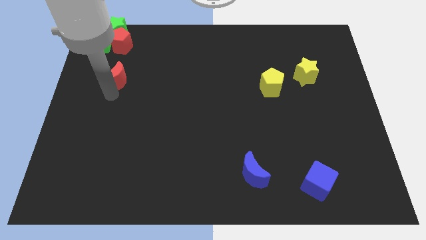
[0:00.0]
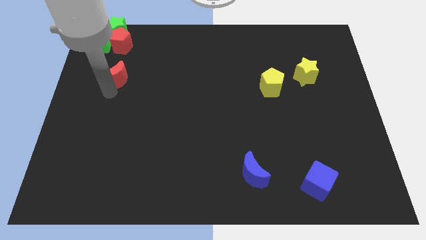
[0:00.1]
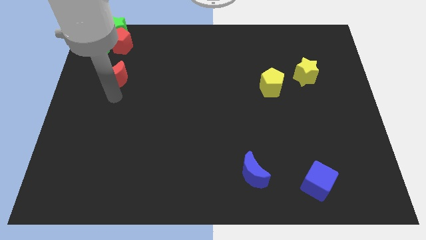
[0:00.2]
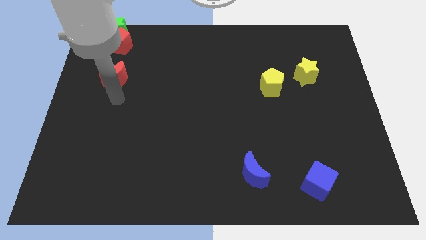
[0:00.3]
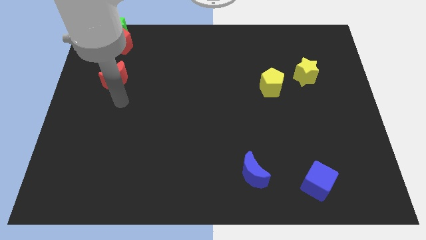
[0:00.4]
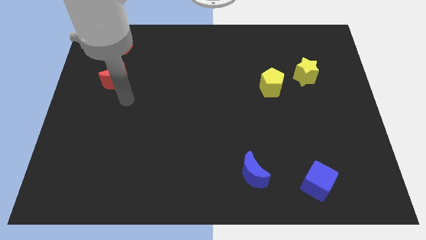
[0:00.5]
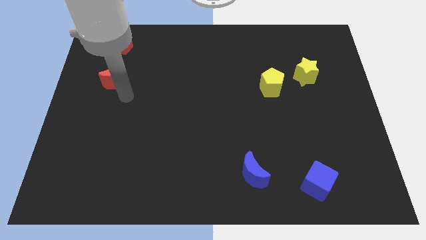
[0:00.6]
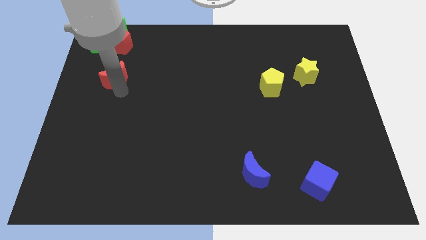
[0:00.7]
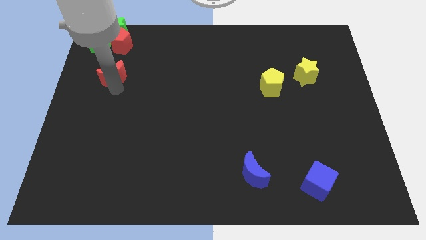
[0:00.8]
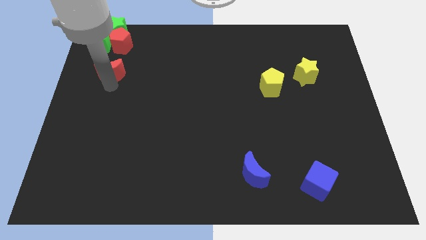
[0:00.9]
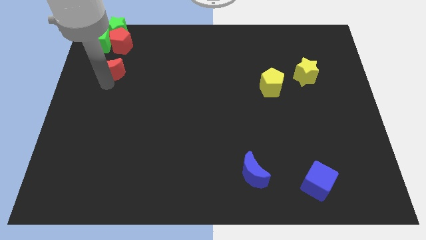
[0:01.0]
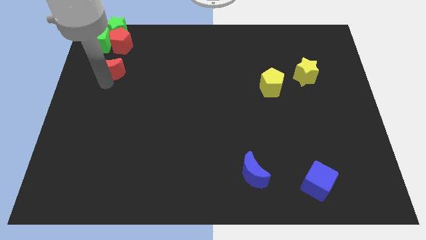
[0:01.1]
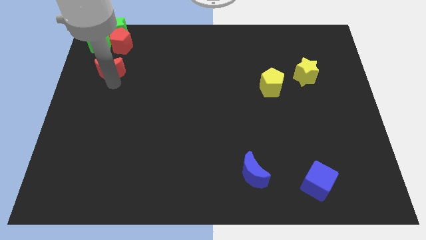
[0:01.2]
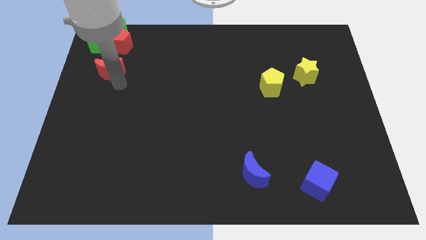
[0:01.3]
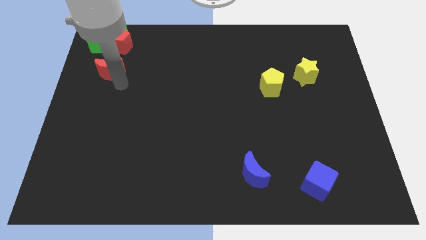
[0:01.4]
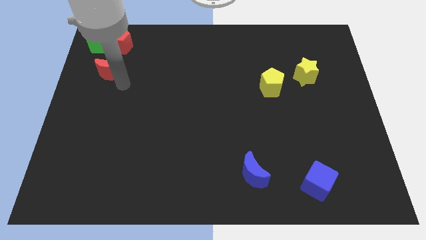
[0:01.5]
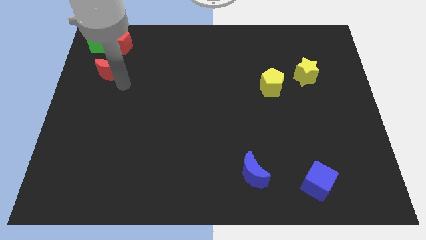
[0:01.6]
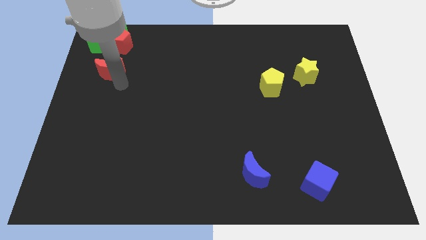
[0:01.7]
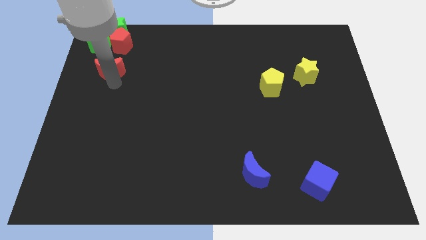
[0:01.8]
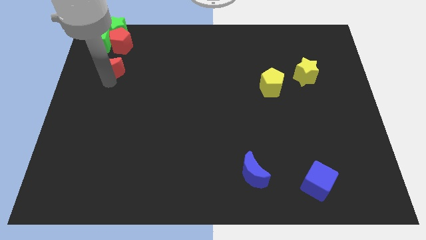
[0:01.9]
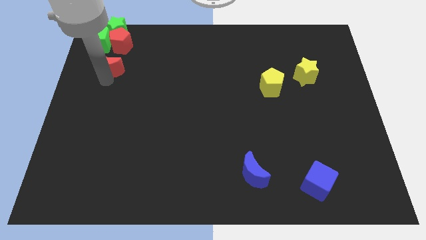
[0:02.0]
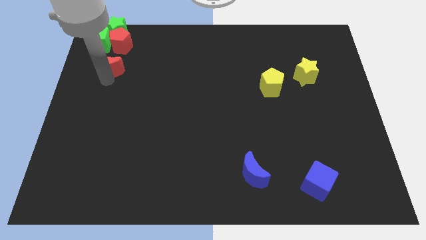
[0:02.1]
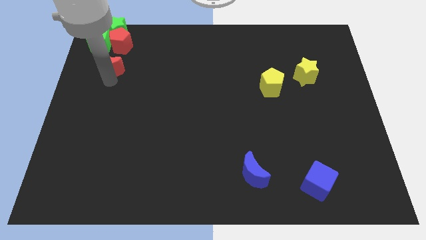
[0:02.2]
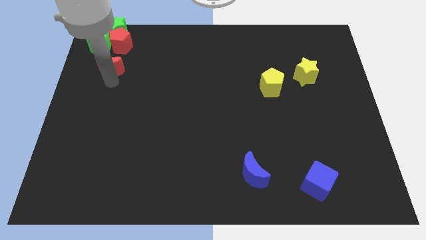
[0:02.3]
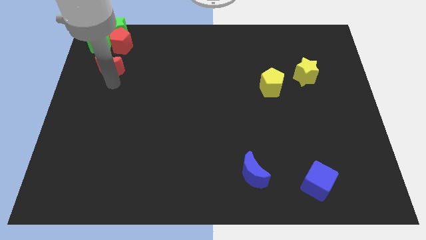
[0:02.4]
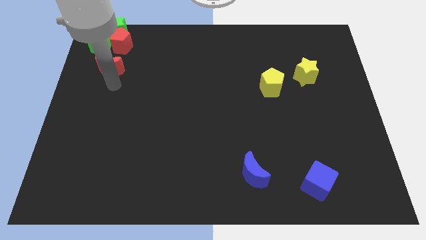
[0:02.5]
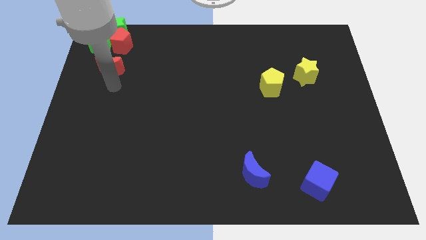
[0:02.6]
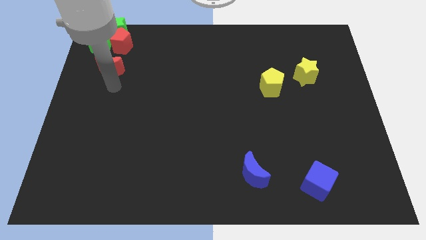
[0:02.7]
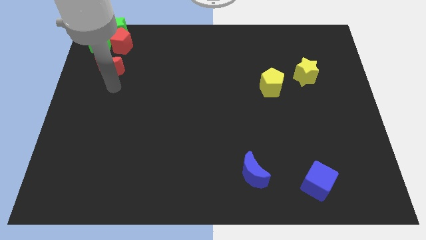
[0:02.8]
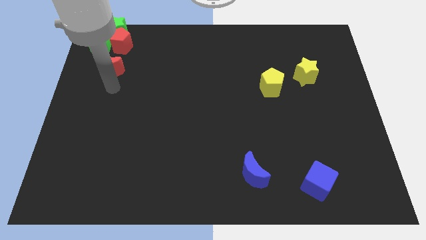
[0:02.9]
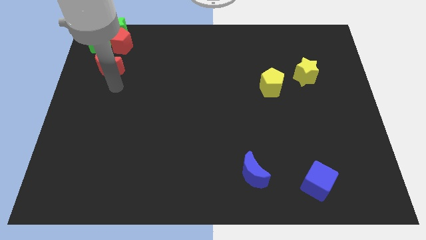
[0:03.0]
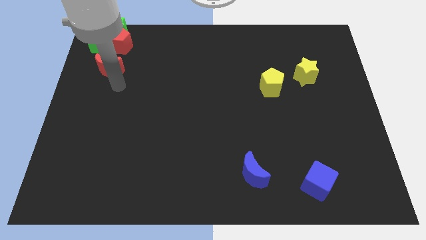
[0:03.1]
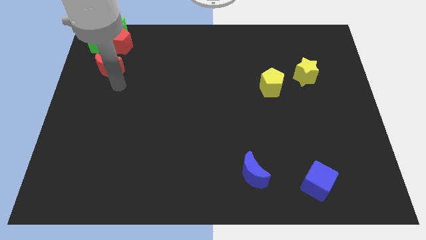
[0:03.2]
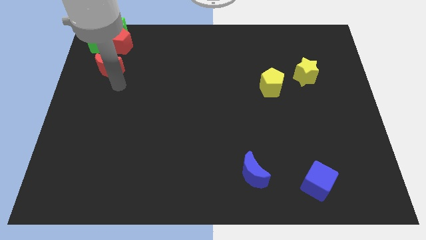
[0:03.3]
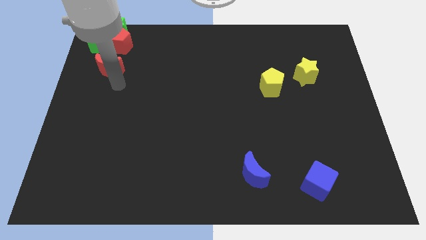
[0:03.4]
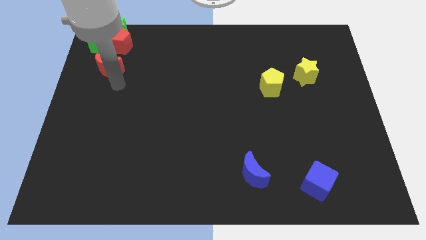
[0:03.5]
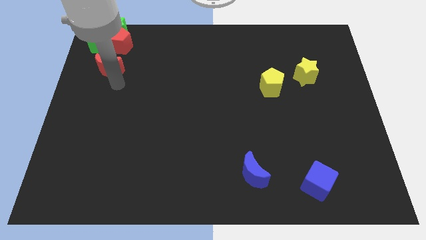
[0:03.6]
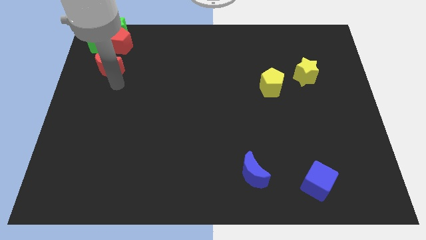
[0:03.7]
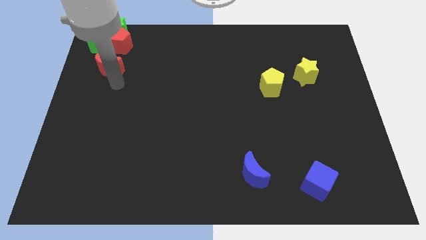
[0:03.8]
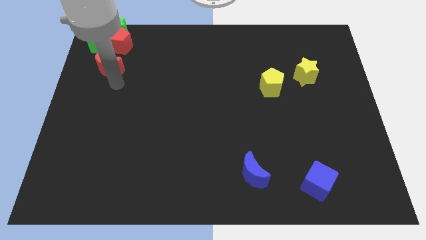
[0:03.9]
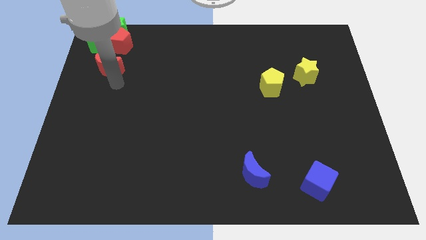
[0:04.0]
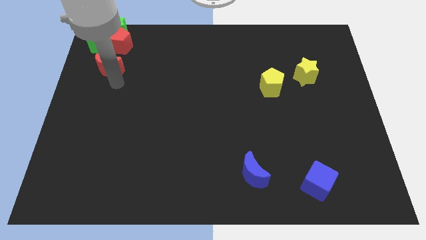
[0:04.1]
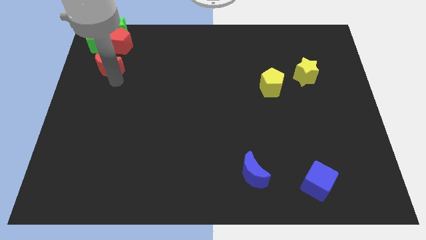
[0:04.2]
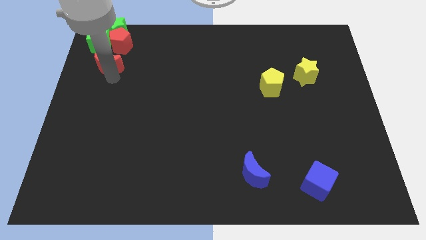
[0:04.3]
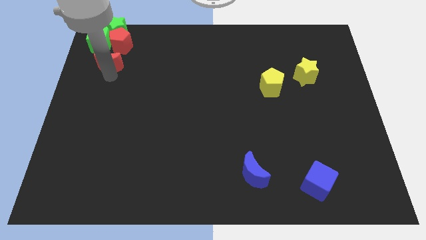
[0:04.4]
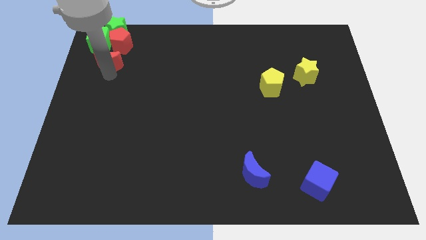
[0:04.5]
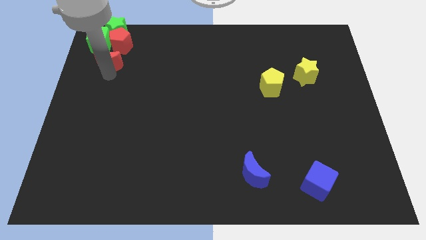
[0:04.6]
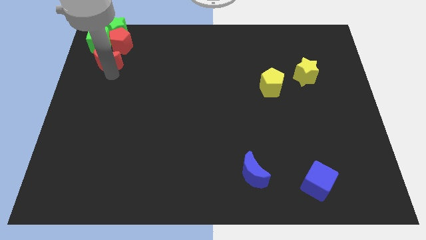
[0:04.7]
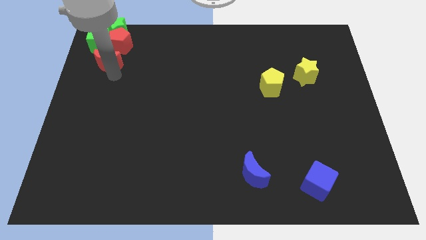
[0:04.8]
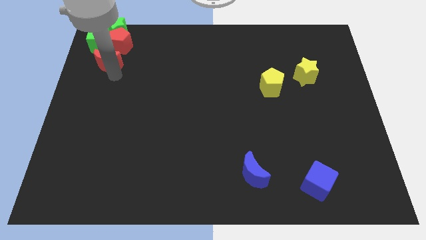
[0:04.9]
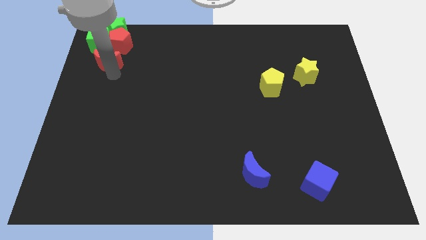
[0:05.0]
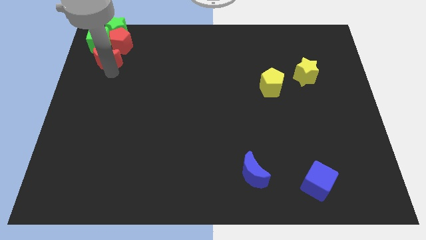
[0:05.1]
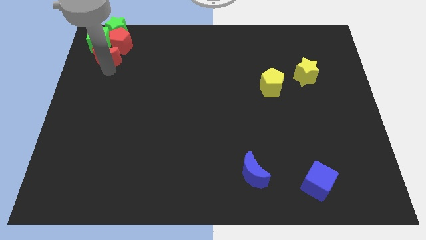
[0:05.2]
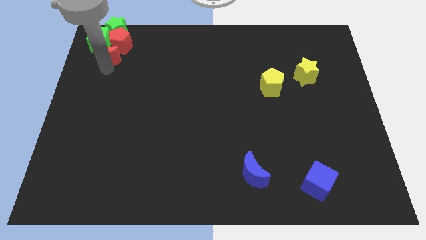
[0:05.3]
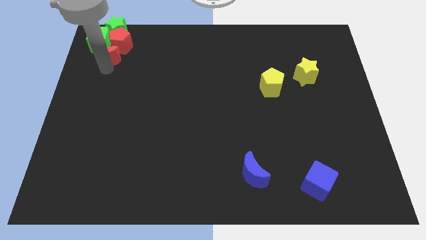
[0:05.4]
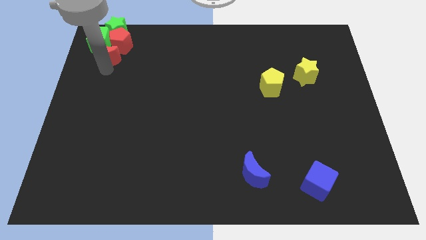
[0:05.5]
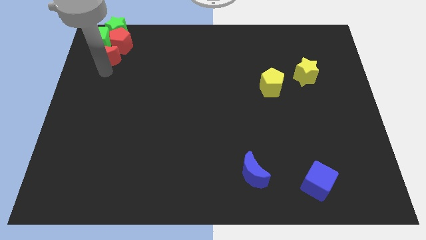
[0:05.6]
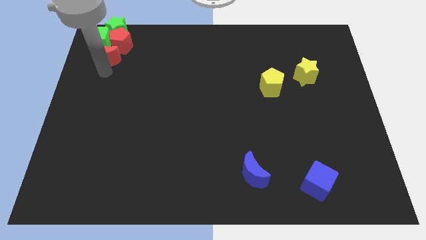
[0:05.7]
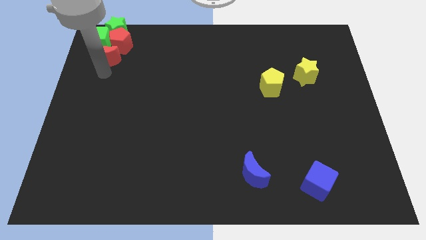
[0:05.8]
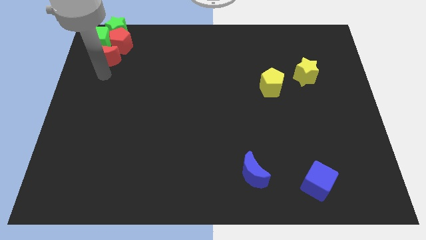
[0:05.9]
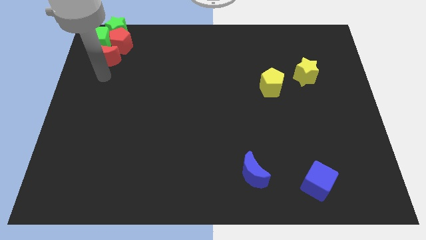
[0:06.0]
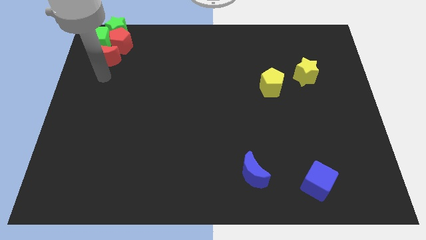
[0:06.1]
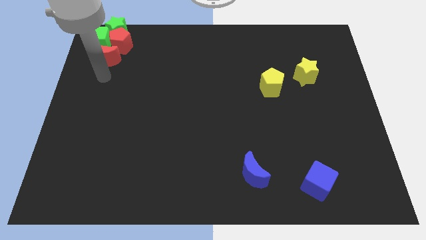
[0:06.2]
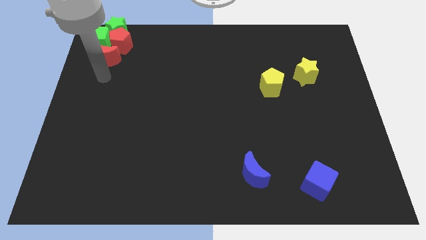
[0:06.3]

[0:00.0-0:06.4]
add the red crescent to both the green blocks and red pentagon

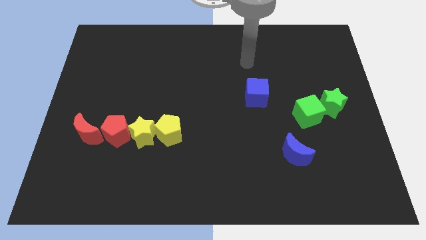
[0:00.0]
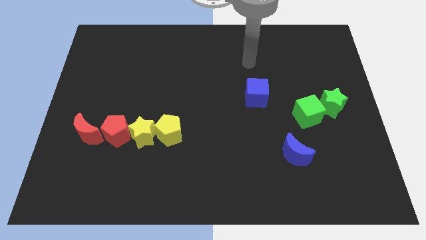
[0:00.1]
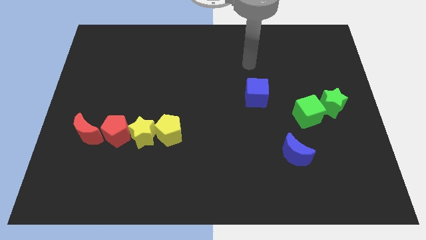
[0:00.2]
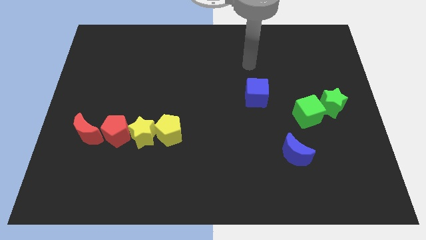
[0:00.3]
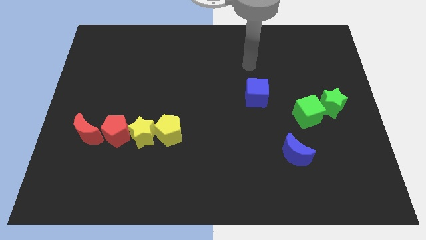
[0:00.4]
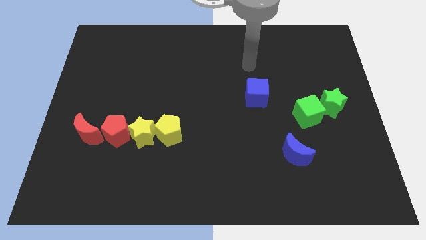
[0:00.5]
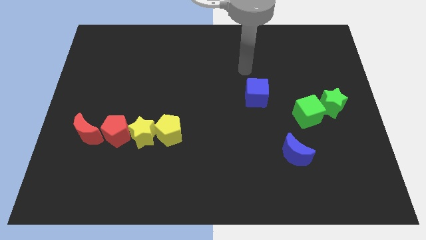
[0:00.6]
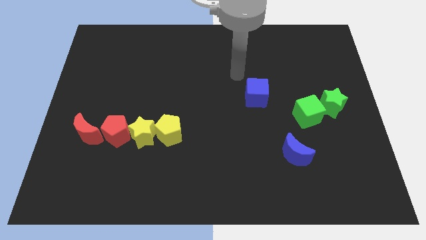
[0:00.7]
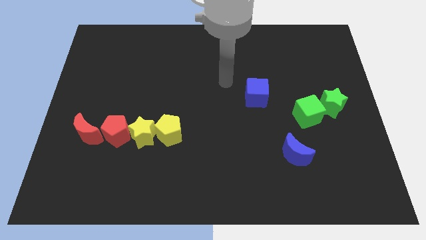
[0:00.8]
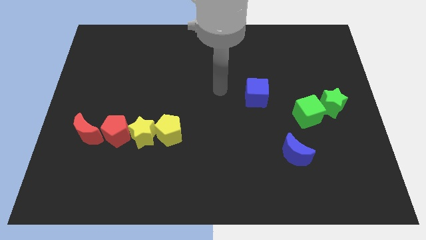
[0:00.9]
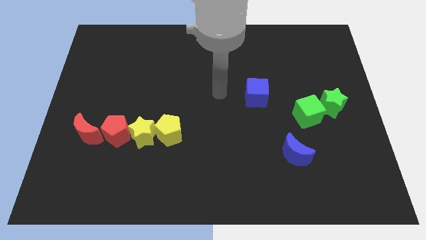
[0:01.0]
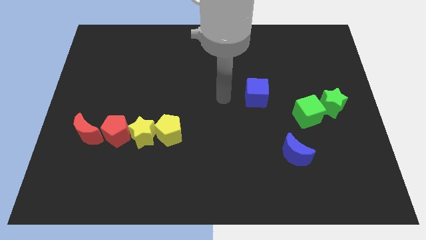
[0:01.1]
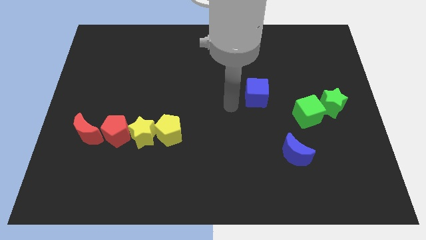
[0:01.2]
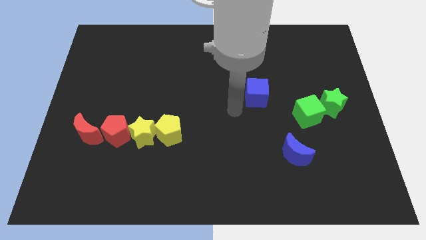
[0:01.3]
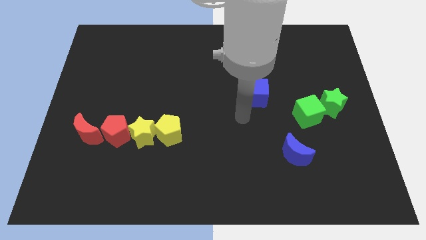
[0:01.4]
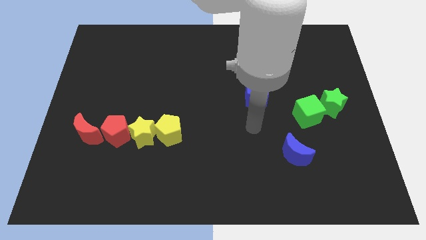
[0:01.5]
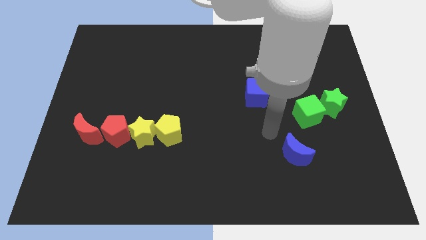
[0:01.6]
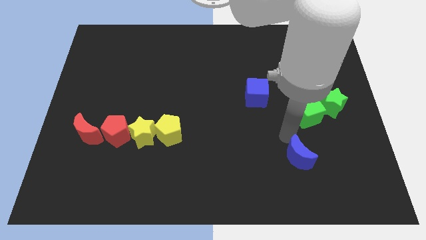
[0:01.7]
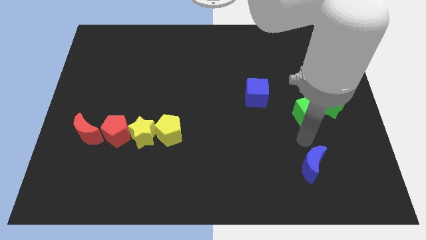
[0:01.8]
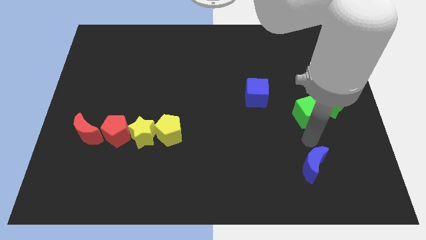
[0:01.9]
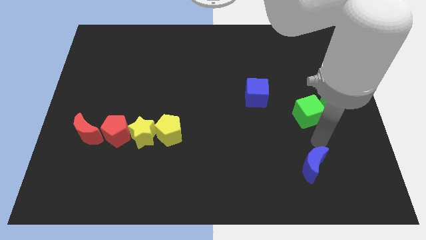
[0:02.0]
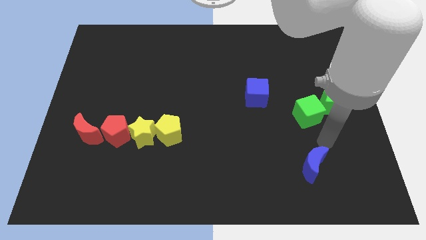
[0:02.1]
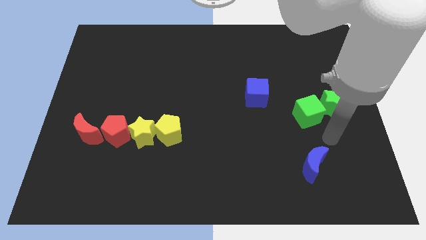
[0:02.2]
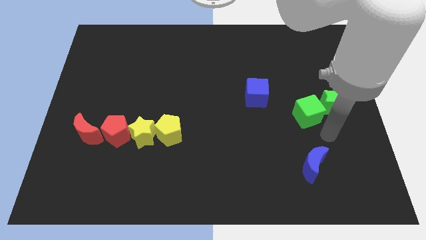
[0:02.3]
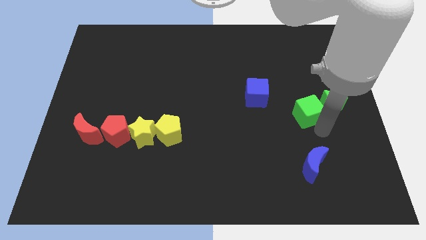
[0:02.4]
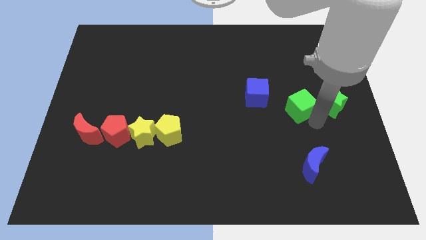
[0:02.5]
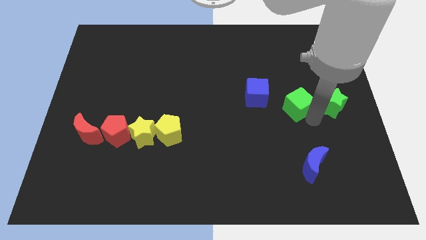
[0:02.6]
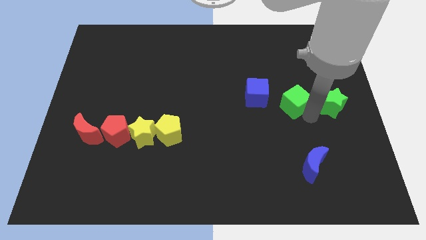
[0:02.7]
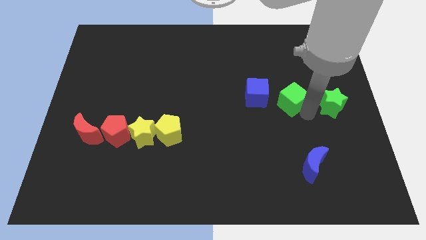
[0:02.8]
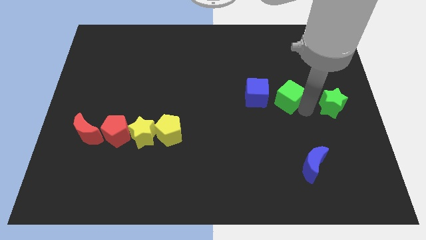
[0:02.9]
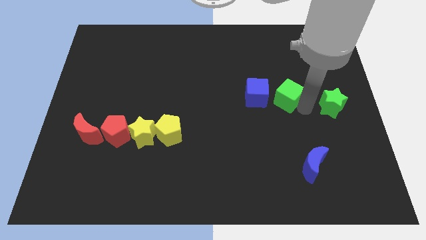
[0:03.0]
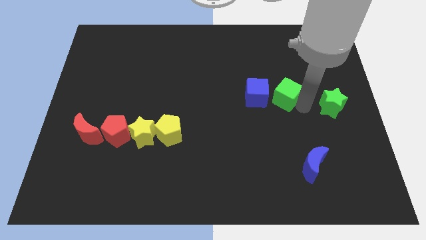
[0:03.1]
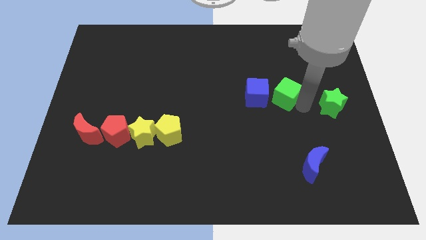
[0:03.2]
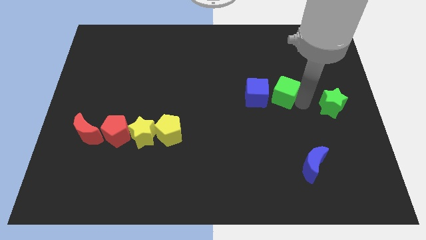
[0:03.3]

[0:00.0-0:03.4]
push green cube to the right of the blue cube
